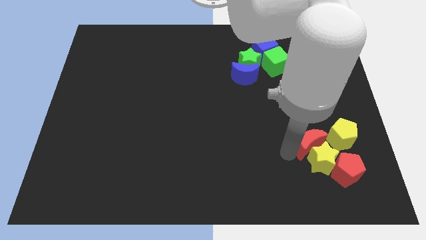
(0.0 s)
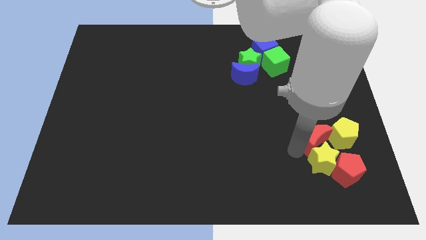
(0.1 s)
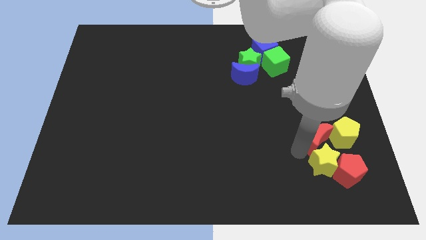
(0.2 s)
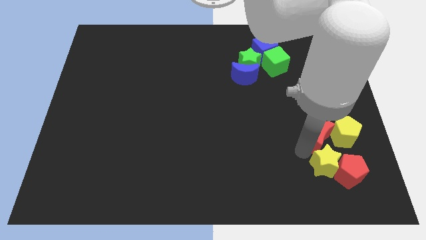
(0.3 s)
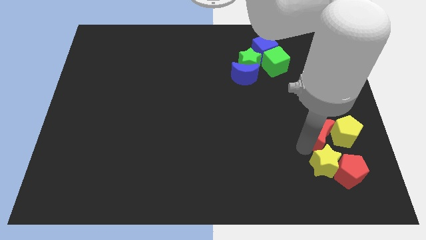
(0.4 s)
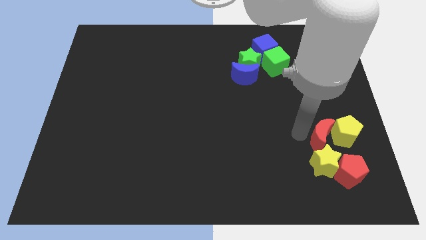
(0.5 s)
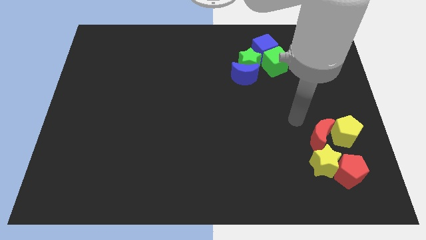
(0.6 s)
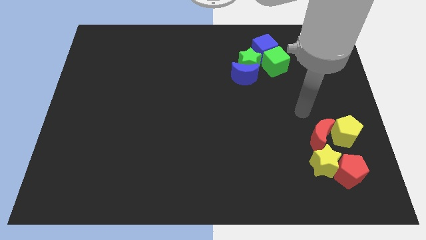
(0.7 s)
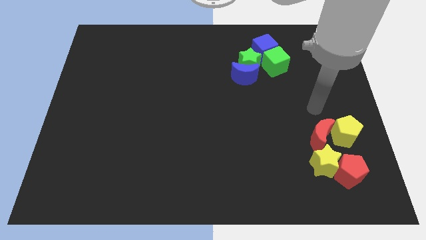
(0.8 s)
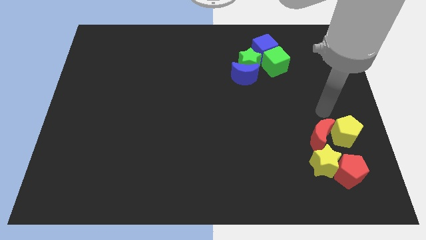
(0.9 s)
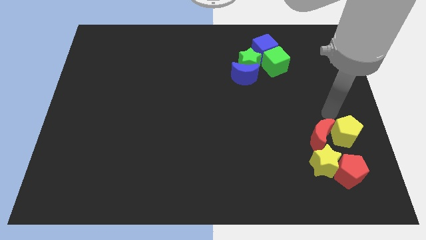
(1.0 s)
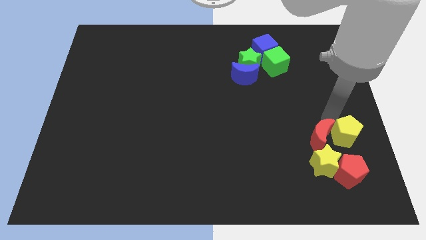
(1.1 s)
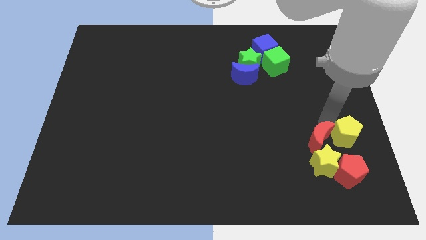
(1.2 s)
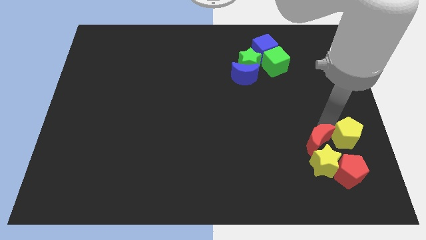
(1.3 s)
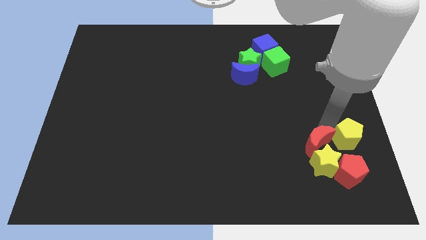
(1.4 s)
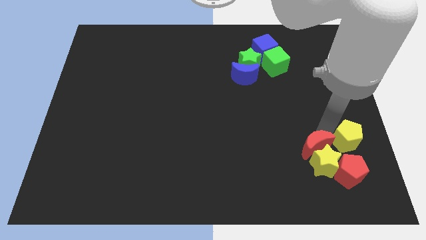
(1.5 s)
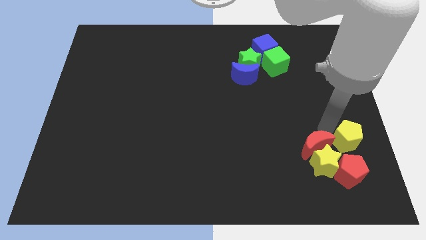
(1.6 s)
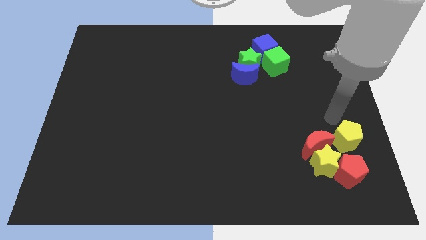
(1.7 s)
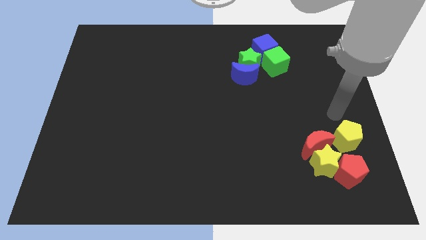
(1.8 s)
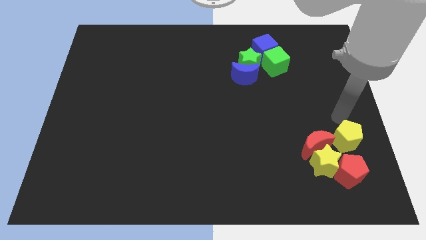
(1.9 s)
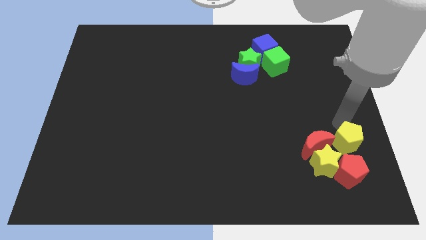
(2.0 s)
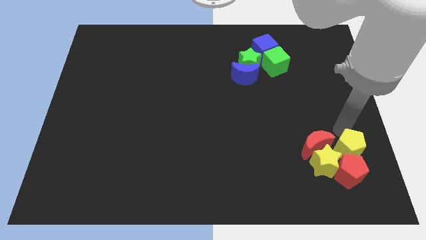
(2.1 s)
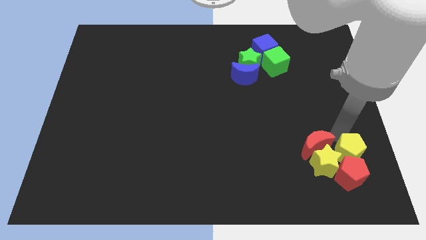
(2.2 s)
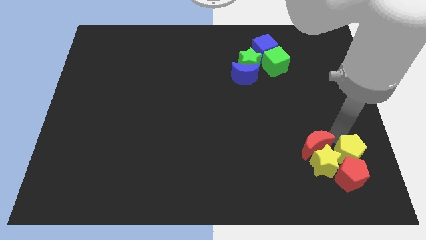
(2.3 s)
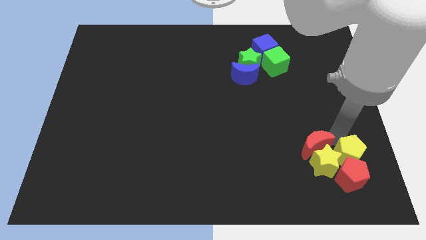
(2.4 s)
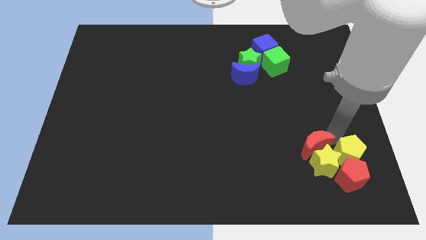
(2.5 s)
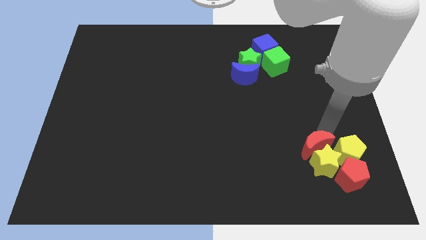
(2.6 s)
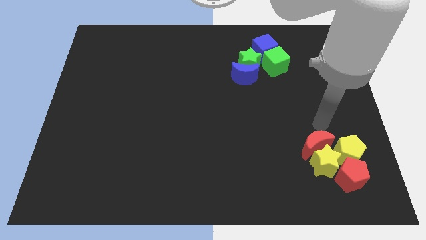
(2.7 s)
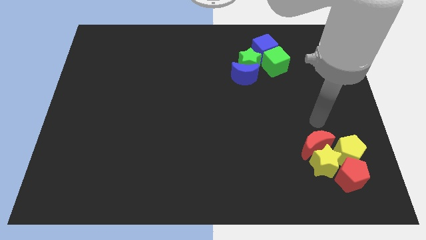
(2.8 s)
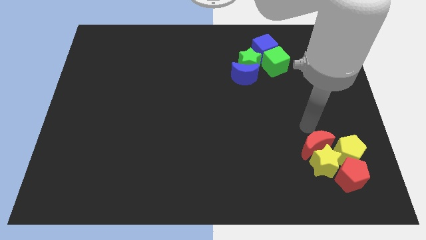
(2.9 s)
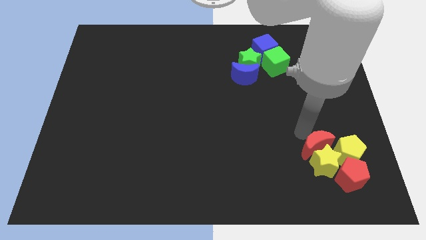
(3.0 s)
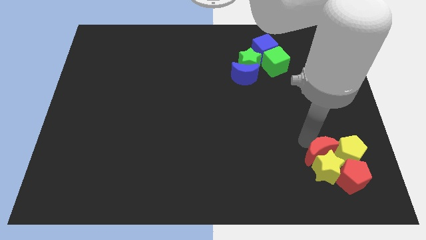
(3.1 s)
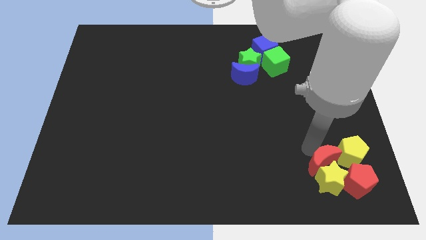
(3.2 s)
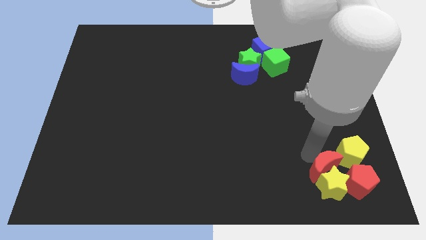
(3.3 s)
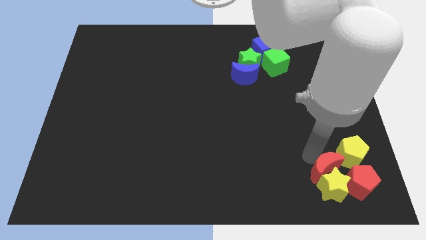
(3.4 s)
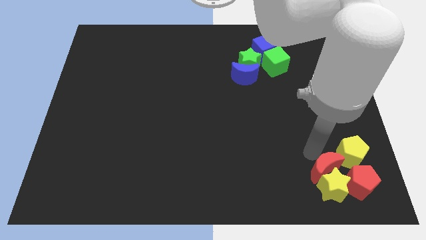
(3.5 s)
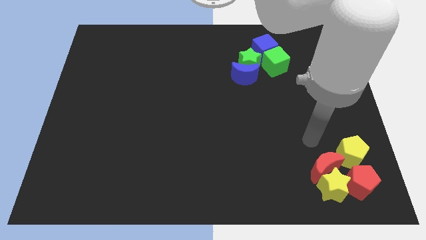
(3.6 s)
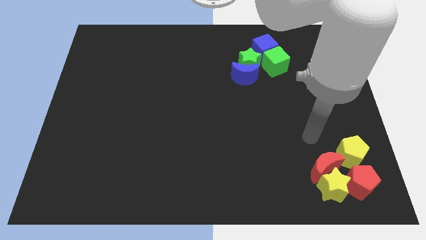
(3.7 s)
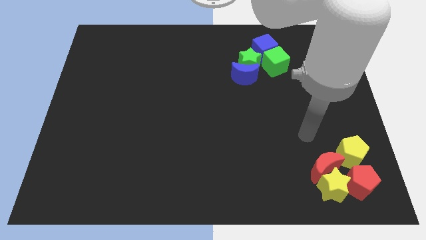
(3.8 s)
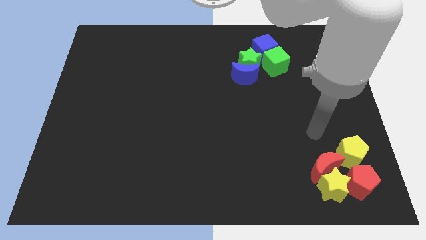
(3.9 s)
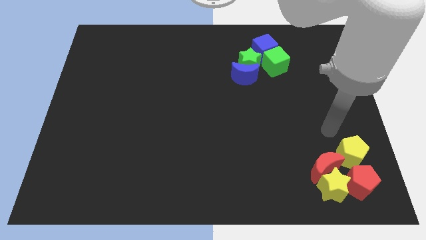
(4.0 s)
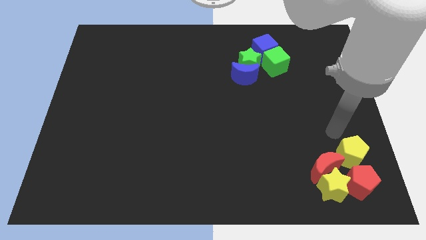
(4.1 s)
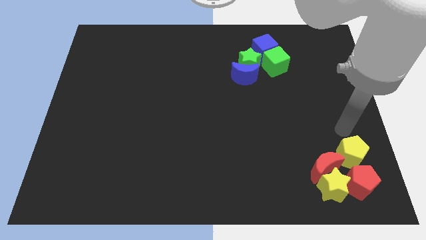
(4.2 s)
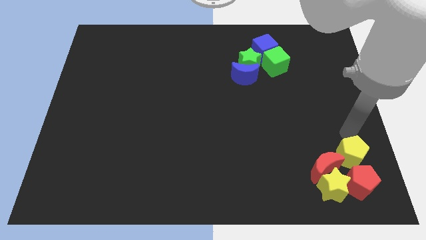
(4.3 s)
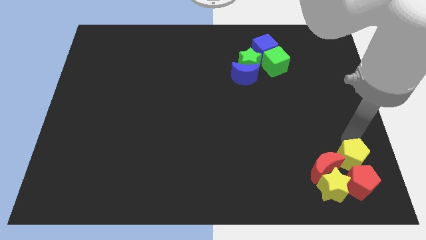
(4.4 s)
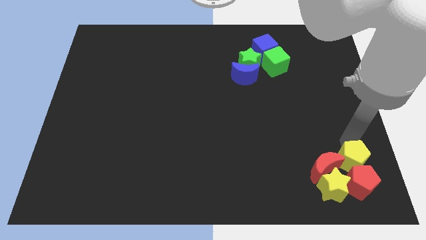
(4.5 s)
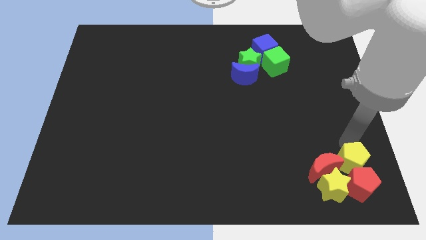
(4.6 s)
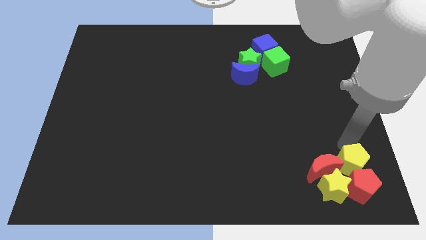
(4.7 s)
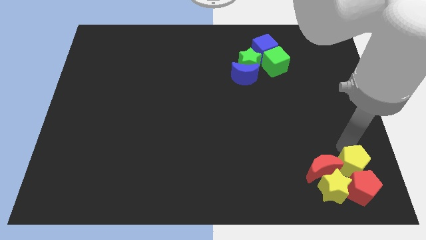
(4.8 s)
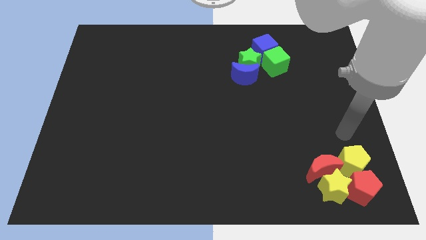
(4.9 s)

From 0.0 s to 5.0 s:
place the red and yellow blocks together in a group at bottom right

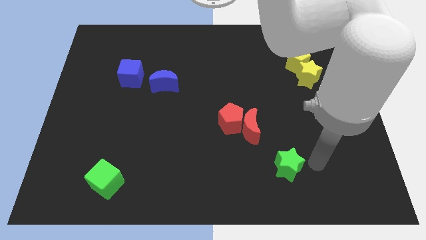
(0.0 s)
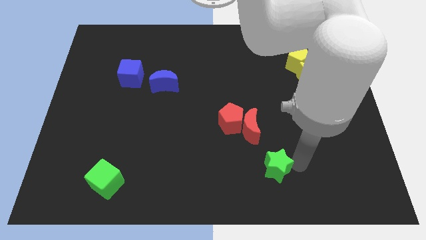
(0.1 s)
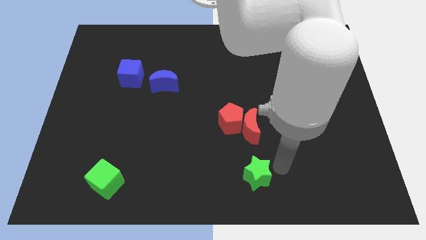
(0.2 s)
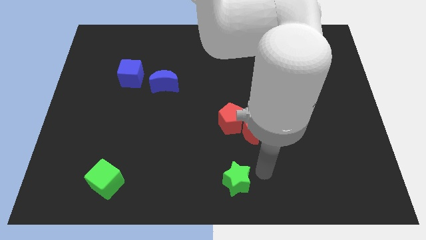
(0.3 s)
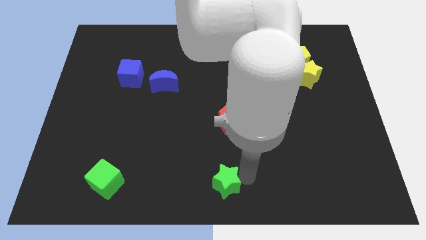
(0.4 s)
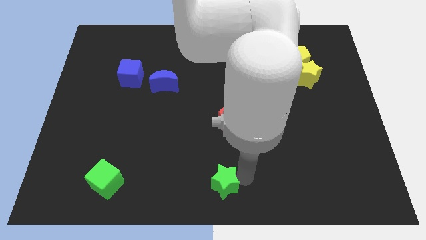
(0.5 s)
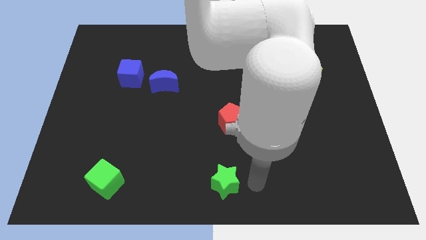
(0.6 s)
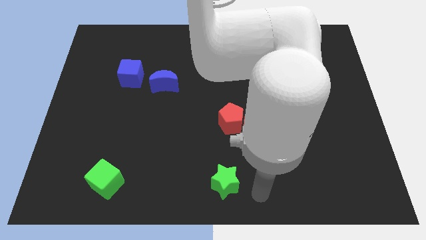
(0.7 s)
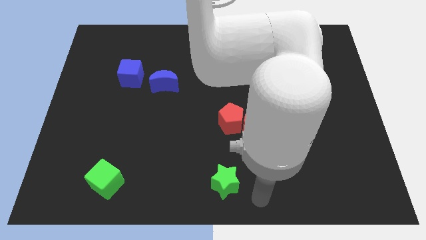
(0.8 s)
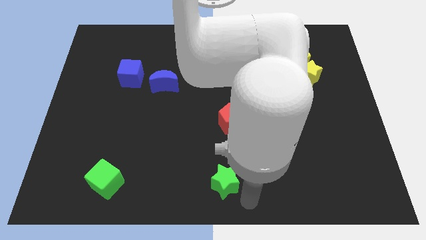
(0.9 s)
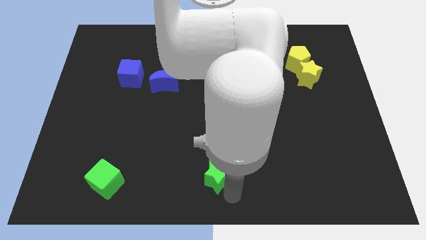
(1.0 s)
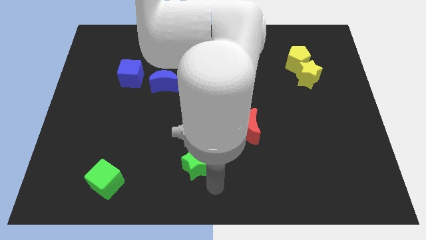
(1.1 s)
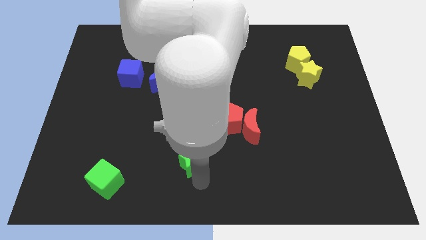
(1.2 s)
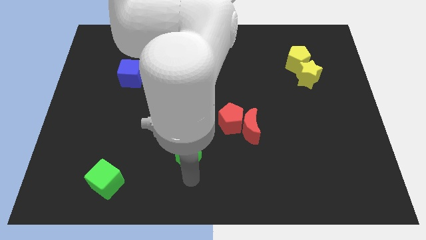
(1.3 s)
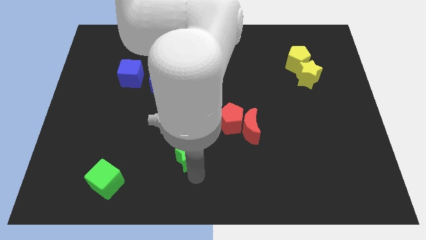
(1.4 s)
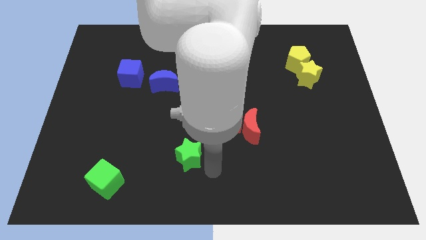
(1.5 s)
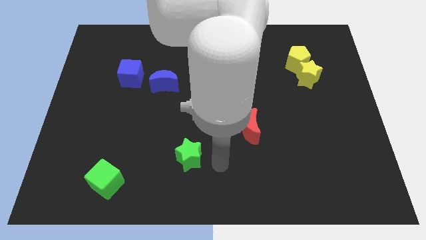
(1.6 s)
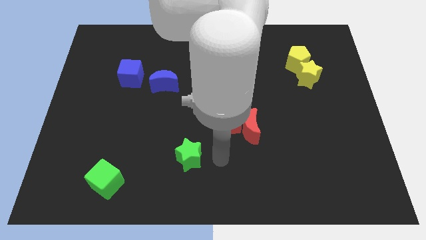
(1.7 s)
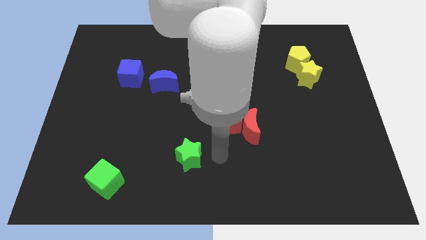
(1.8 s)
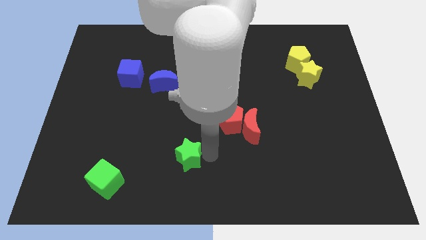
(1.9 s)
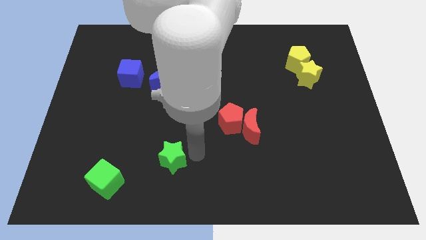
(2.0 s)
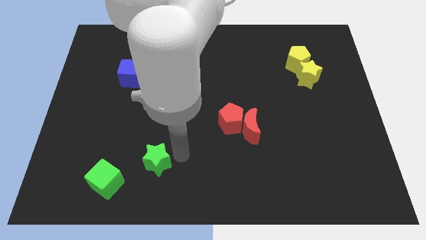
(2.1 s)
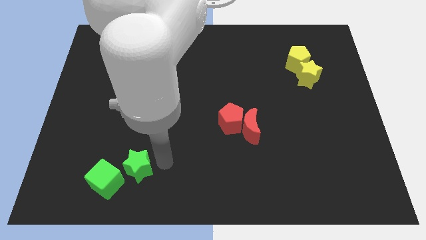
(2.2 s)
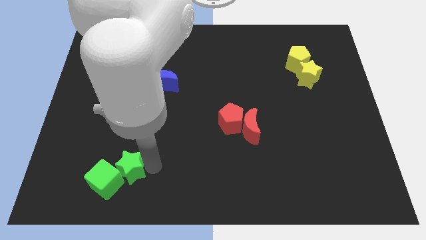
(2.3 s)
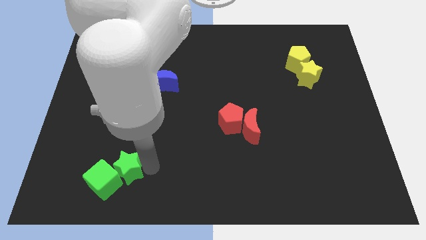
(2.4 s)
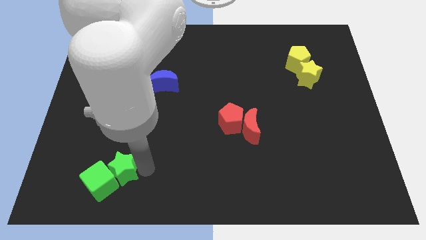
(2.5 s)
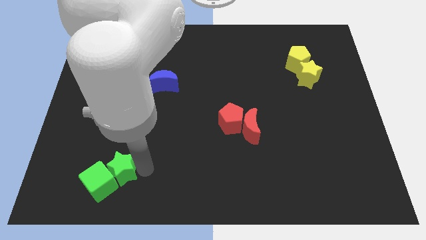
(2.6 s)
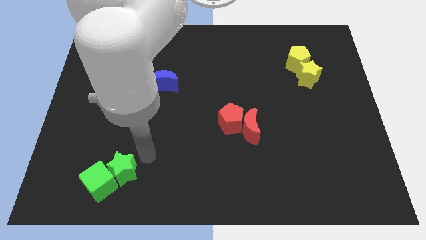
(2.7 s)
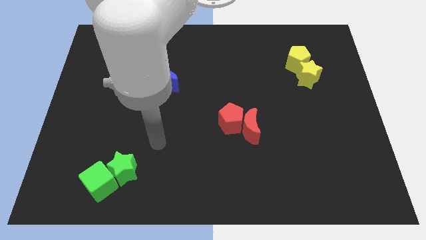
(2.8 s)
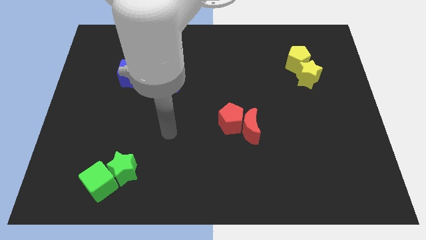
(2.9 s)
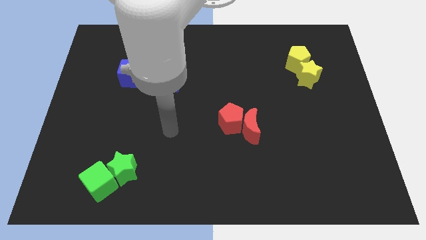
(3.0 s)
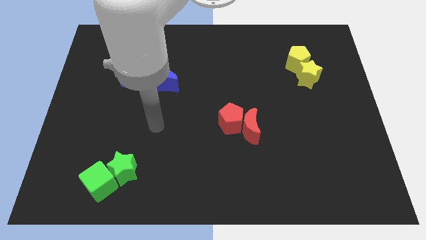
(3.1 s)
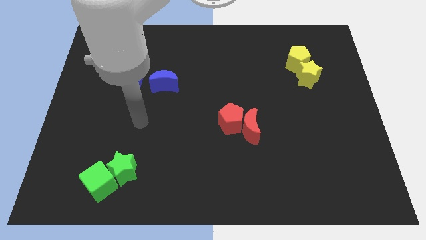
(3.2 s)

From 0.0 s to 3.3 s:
push the green star into the green cube

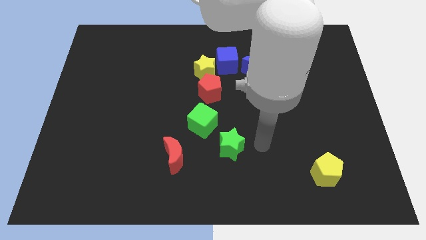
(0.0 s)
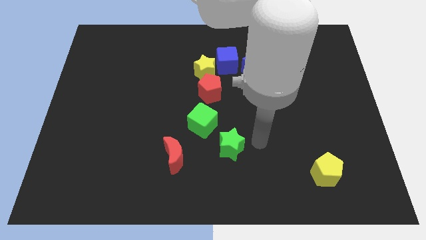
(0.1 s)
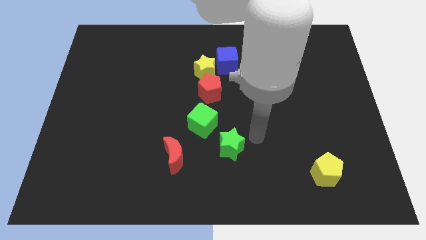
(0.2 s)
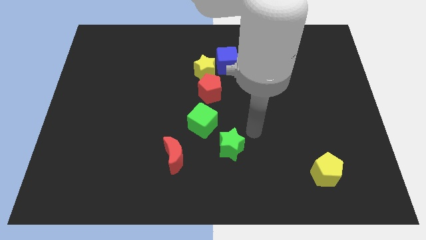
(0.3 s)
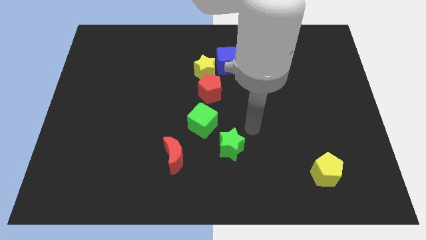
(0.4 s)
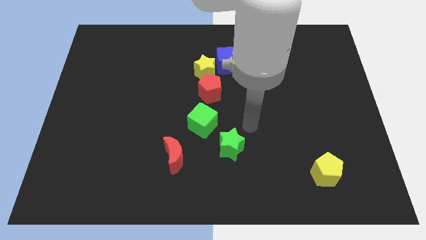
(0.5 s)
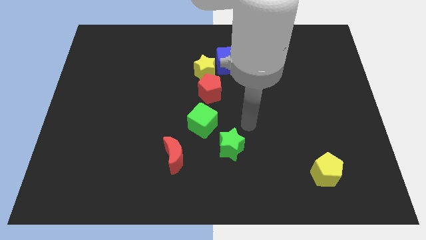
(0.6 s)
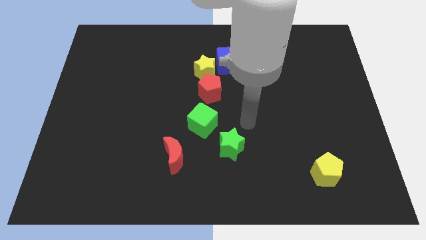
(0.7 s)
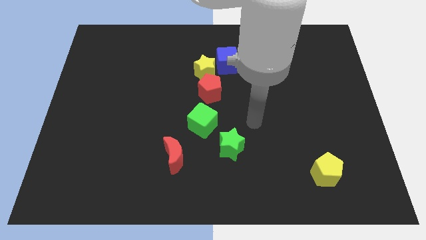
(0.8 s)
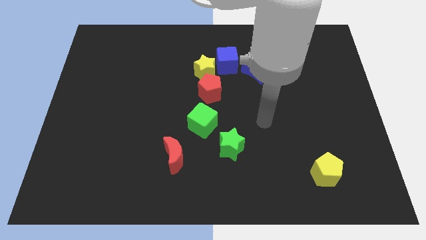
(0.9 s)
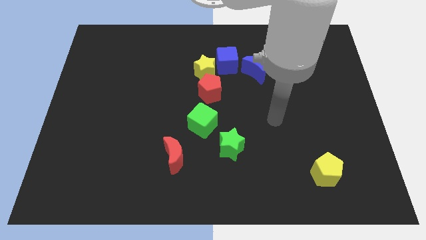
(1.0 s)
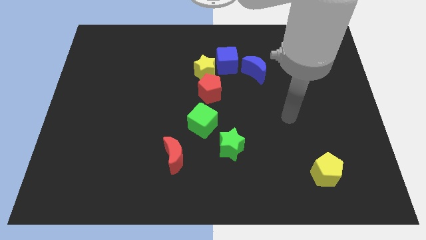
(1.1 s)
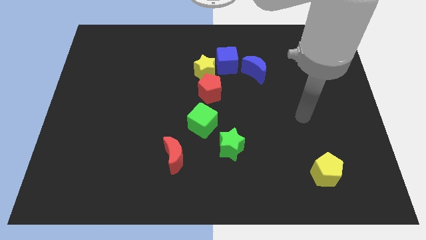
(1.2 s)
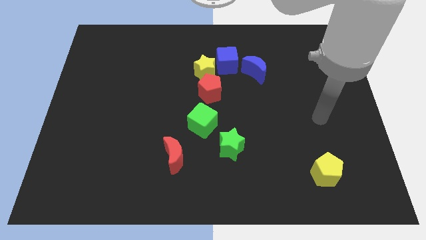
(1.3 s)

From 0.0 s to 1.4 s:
put arm above the yellow pentagon
